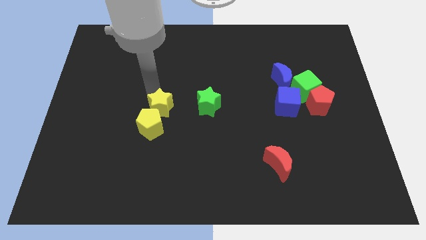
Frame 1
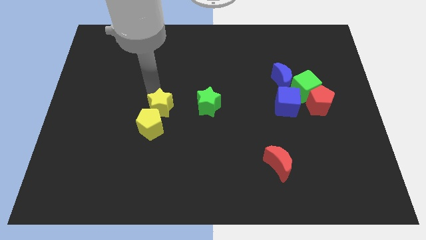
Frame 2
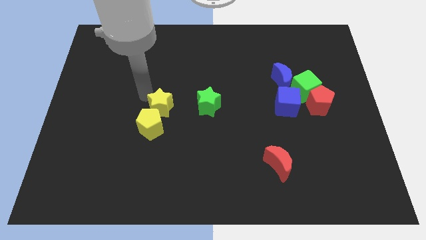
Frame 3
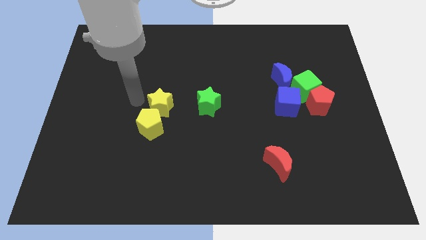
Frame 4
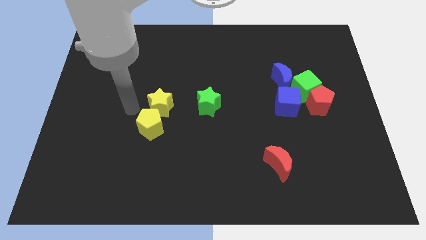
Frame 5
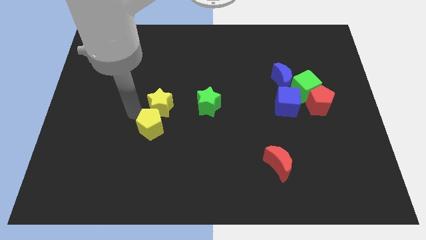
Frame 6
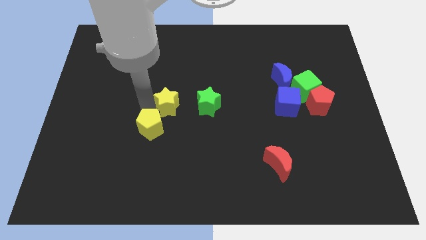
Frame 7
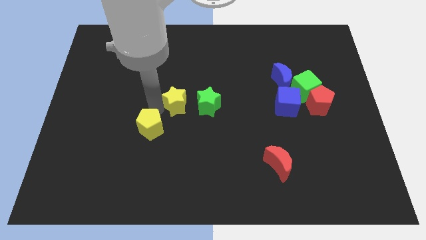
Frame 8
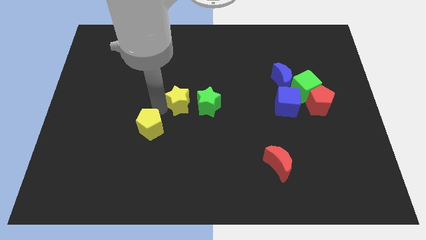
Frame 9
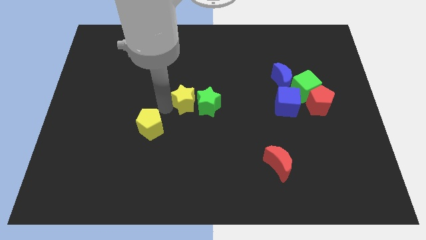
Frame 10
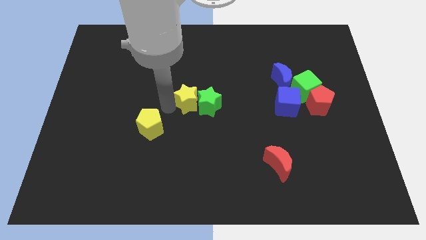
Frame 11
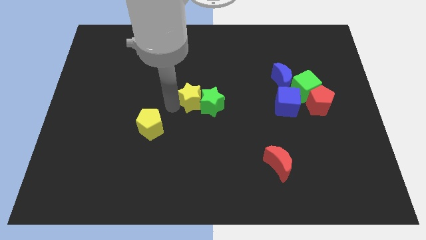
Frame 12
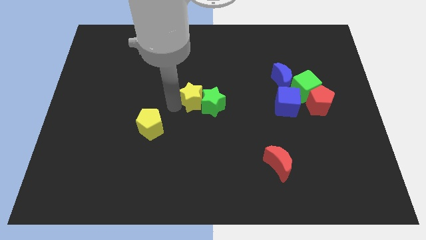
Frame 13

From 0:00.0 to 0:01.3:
slide the yellow star towards the green star

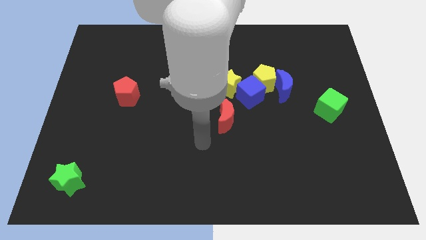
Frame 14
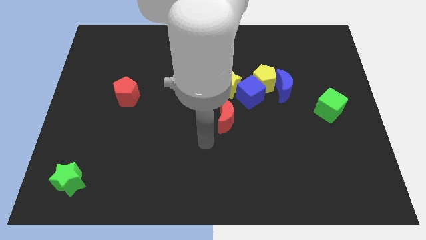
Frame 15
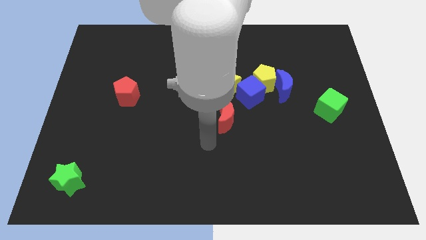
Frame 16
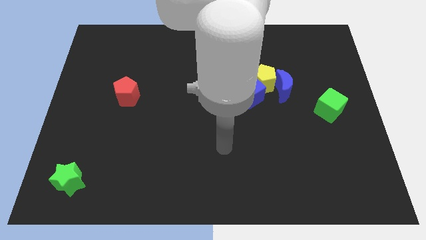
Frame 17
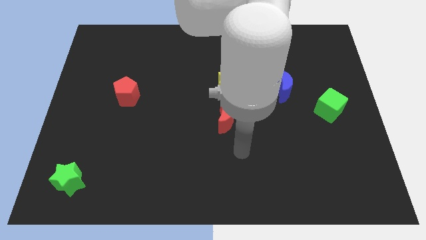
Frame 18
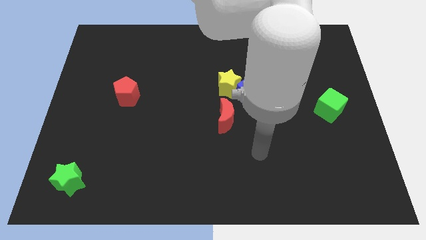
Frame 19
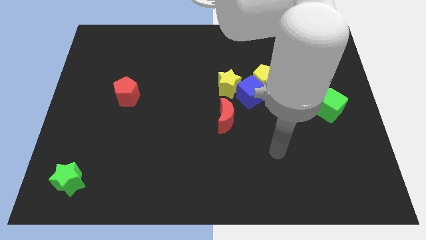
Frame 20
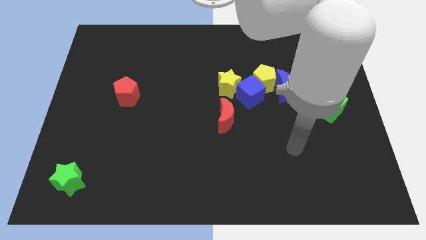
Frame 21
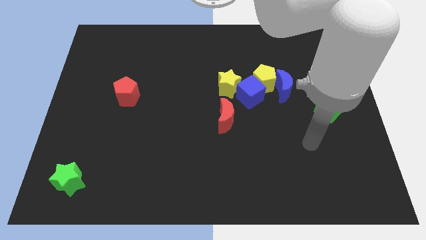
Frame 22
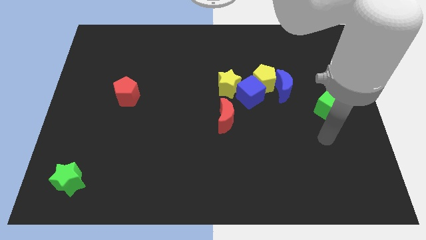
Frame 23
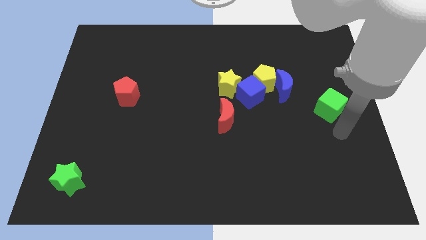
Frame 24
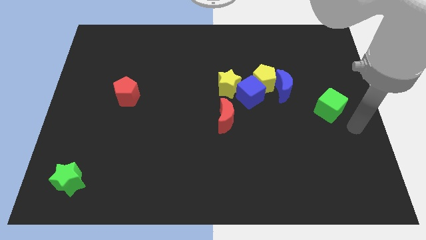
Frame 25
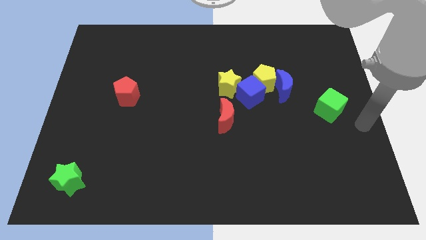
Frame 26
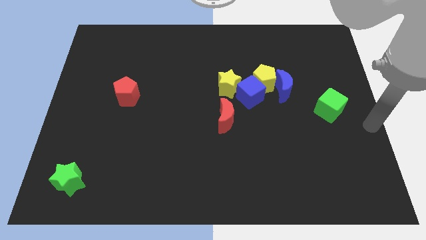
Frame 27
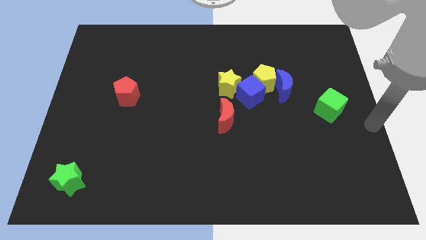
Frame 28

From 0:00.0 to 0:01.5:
move arm to the center right of the board

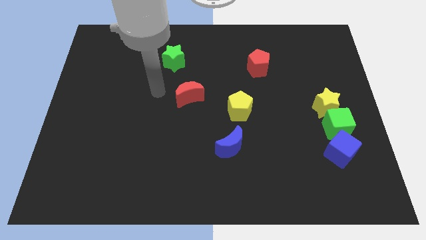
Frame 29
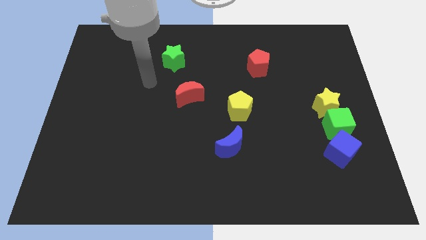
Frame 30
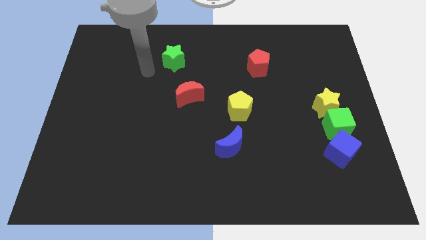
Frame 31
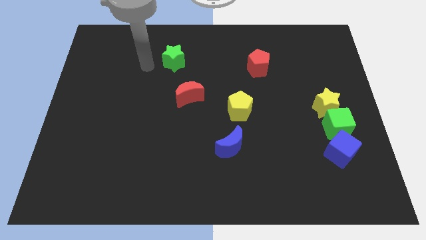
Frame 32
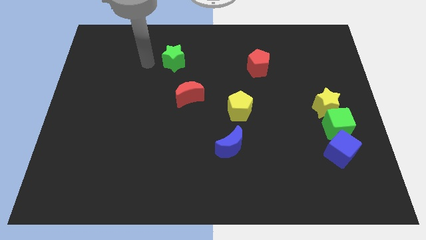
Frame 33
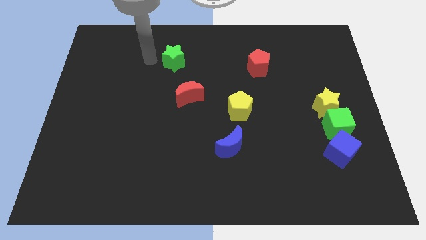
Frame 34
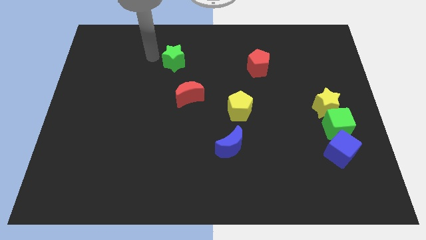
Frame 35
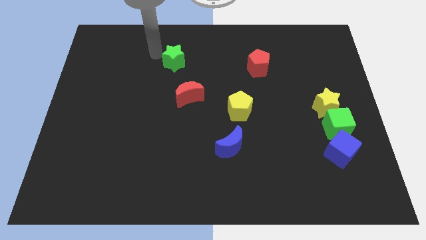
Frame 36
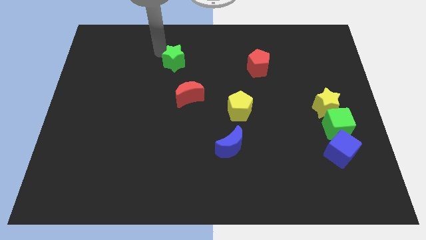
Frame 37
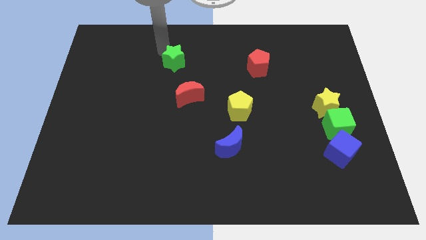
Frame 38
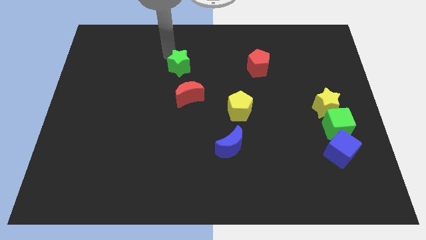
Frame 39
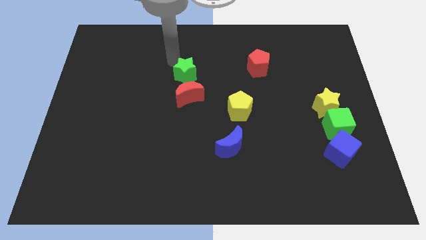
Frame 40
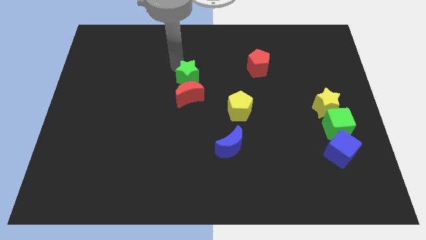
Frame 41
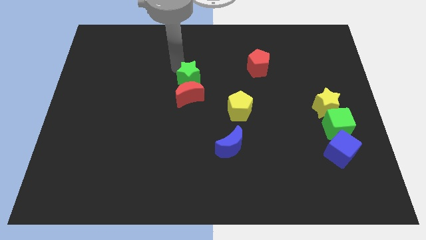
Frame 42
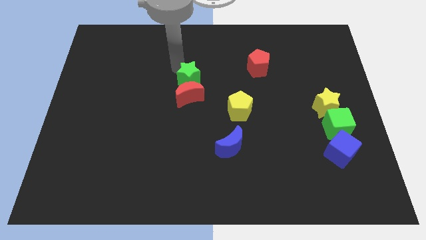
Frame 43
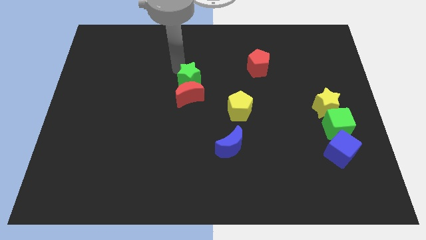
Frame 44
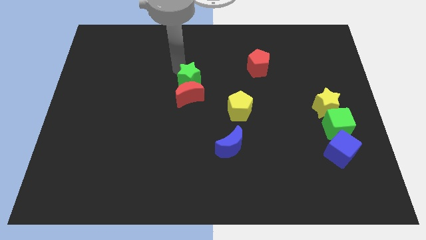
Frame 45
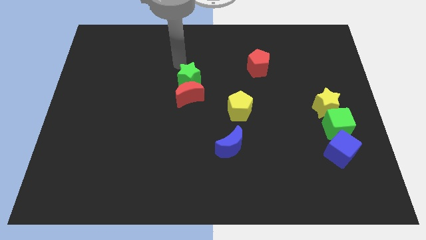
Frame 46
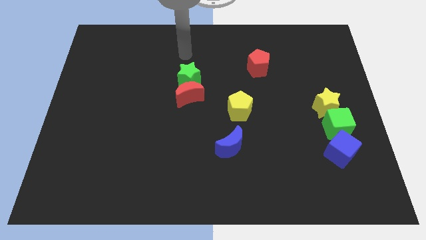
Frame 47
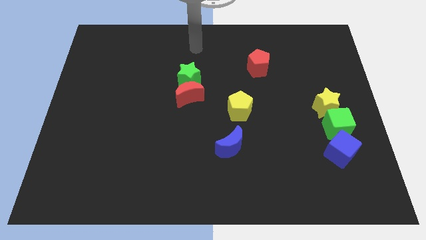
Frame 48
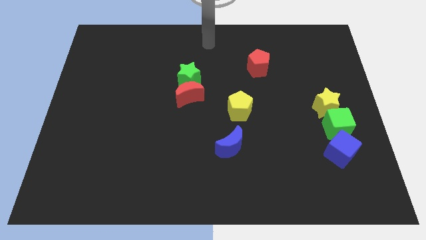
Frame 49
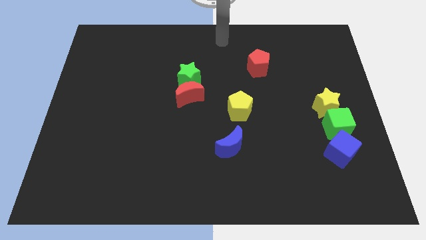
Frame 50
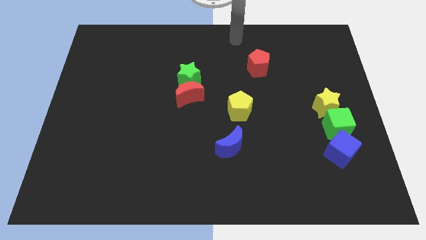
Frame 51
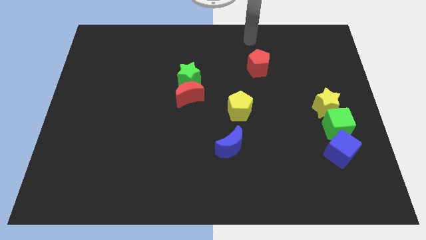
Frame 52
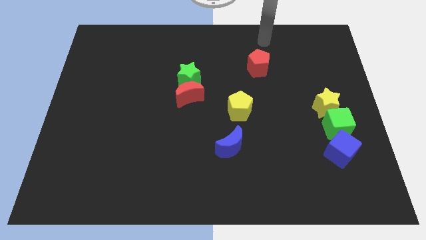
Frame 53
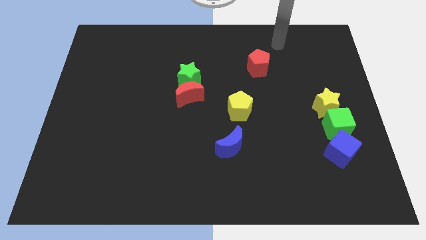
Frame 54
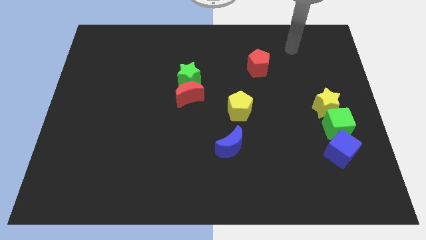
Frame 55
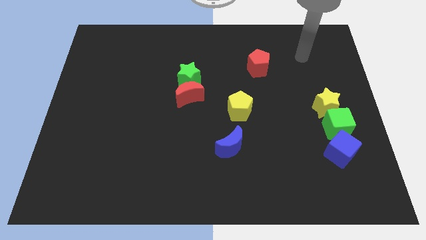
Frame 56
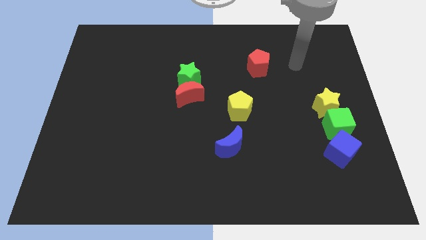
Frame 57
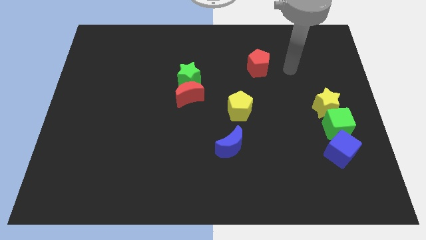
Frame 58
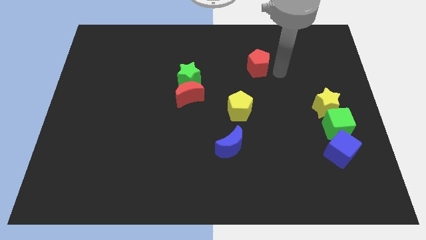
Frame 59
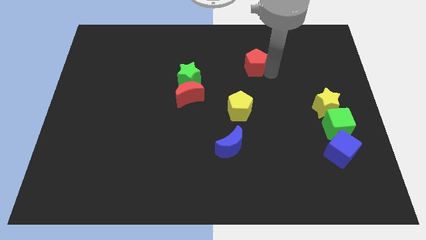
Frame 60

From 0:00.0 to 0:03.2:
move the green star close to the red moon

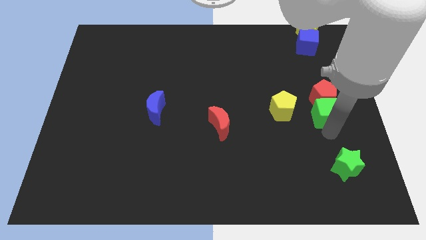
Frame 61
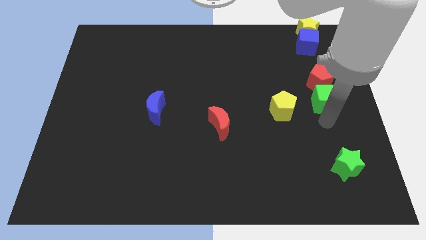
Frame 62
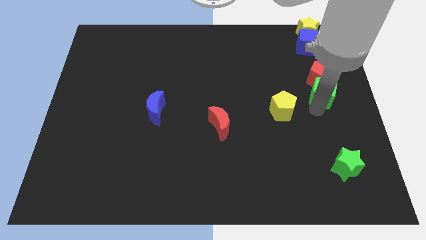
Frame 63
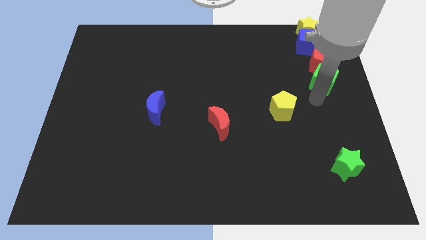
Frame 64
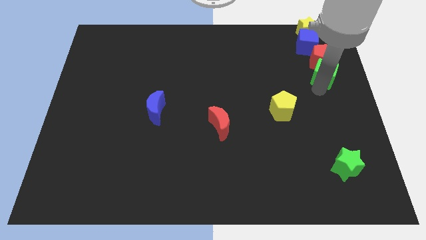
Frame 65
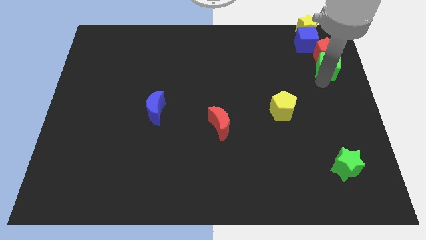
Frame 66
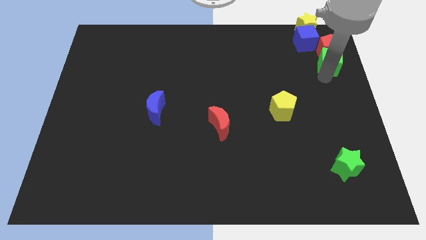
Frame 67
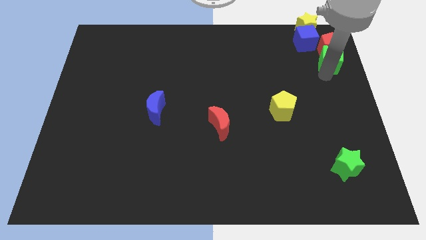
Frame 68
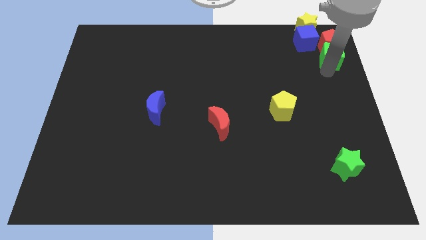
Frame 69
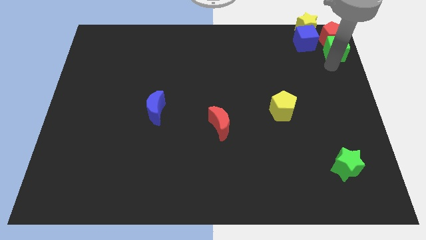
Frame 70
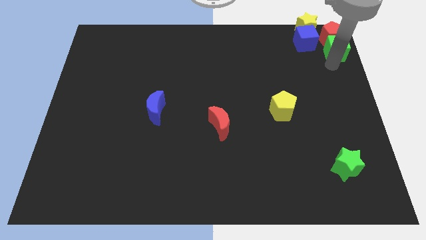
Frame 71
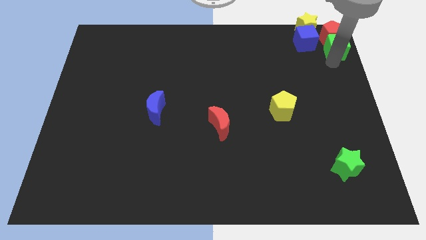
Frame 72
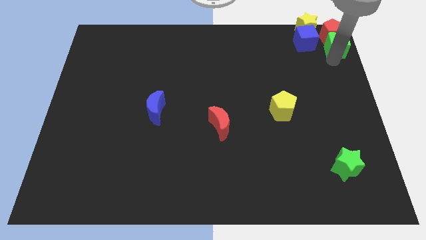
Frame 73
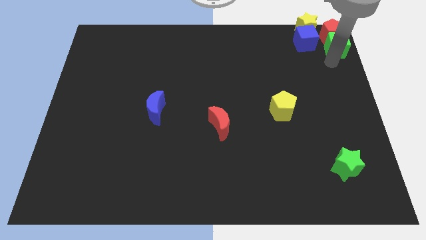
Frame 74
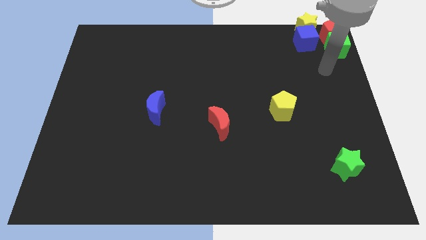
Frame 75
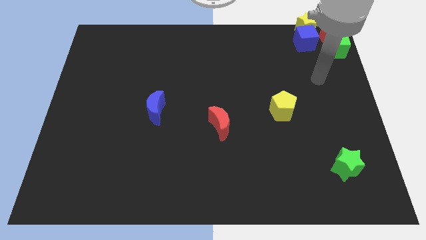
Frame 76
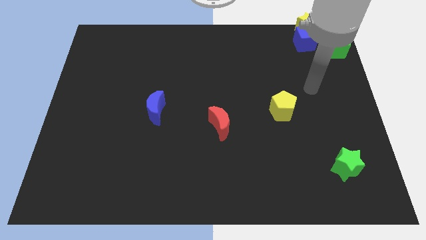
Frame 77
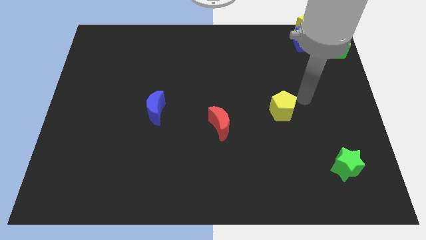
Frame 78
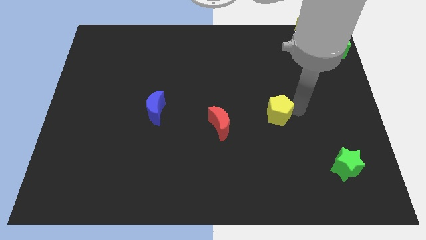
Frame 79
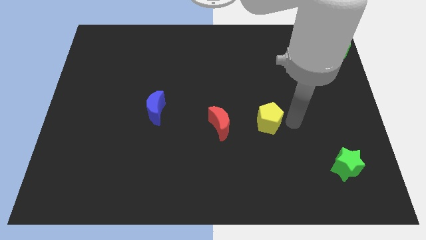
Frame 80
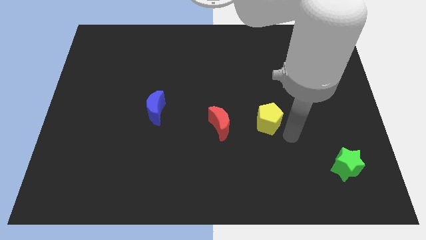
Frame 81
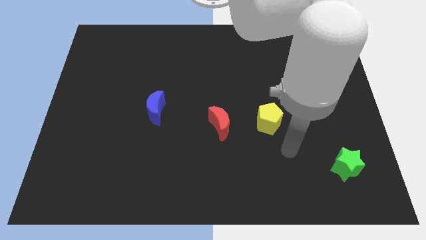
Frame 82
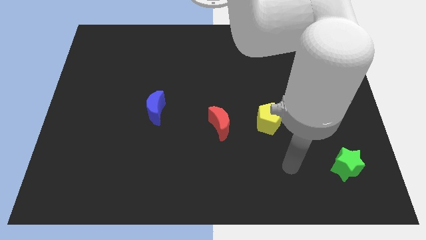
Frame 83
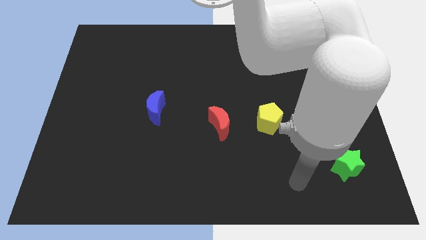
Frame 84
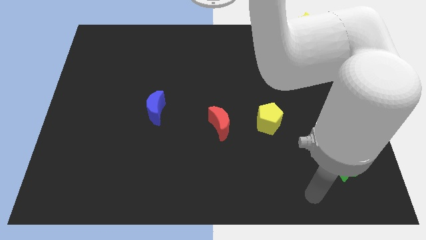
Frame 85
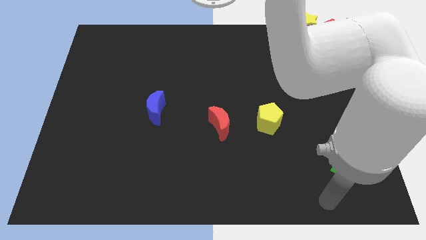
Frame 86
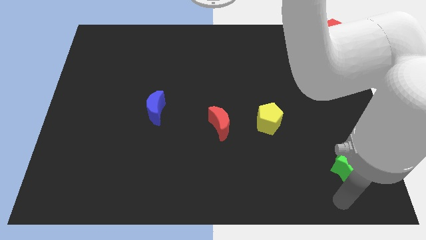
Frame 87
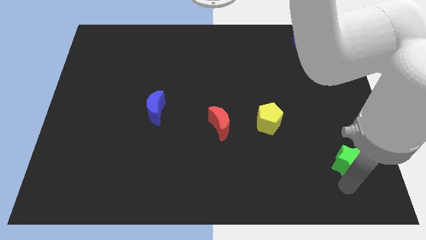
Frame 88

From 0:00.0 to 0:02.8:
push the green cube with red pentagon to the top right corner
